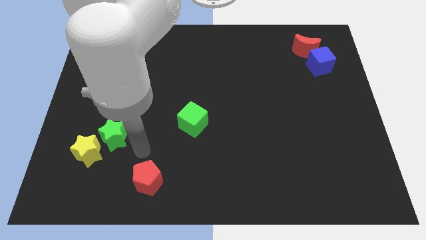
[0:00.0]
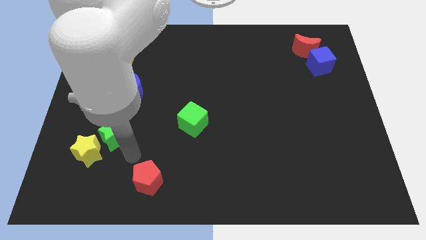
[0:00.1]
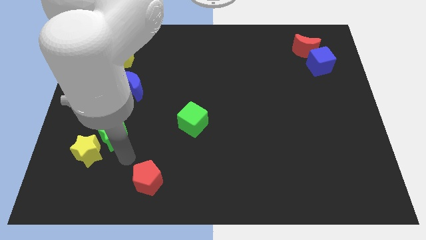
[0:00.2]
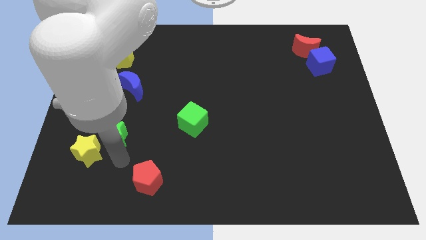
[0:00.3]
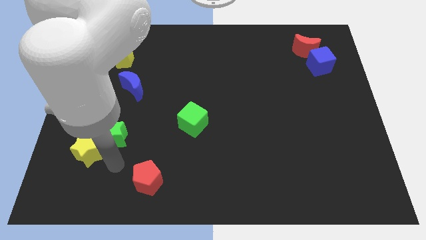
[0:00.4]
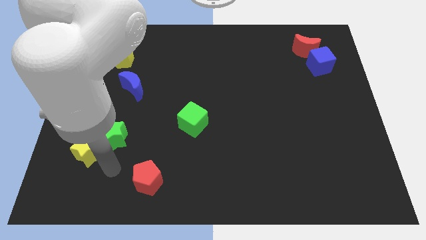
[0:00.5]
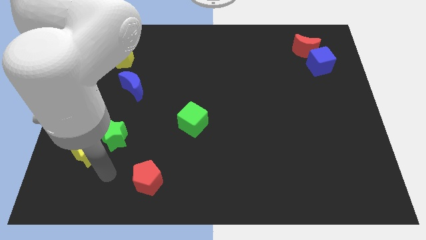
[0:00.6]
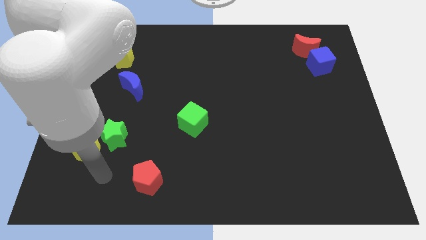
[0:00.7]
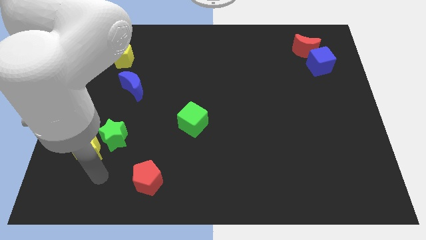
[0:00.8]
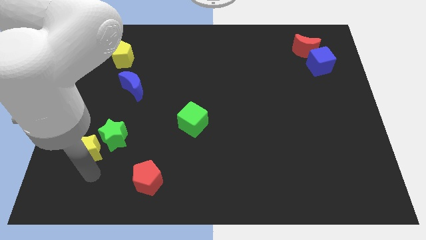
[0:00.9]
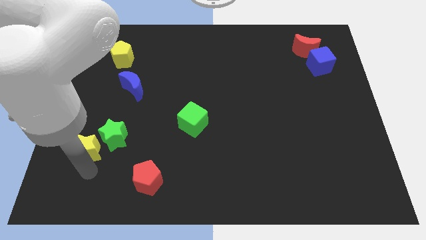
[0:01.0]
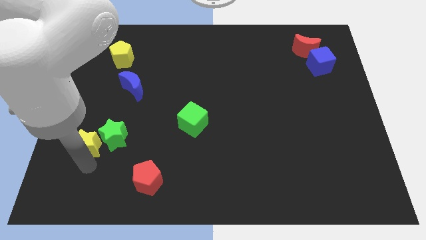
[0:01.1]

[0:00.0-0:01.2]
touch the bottom of yellow star

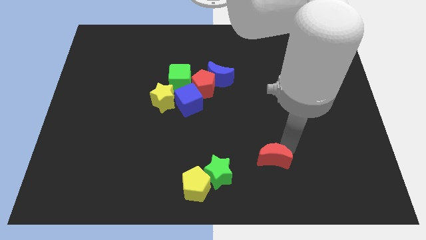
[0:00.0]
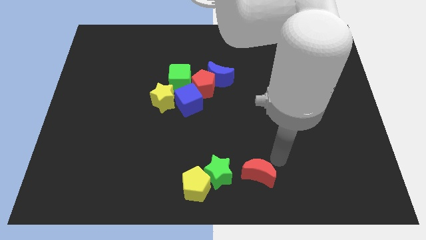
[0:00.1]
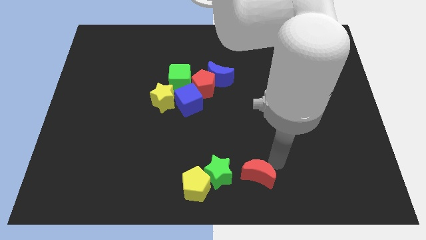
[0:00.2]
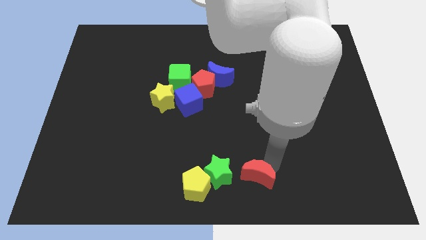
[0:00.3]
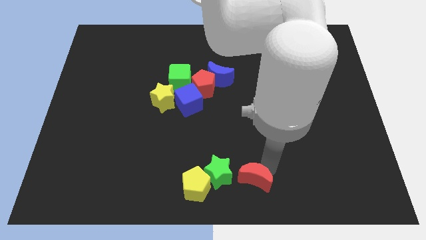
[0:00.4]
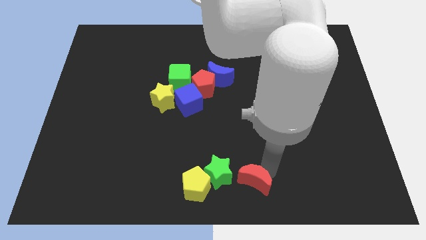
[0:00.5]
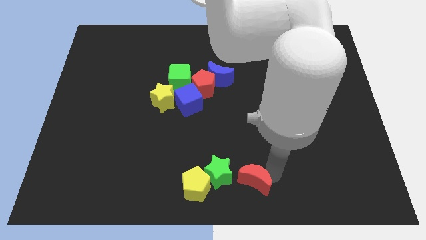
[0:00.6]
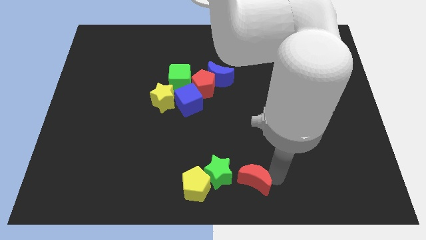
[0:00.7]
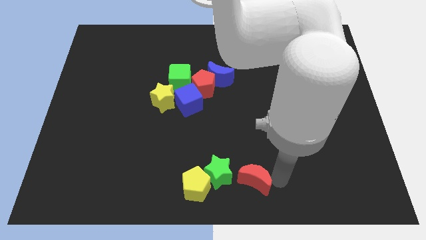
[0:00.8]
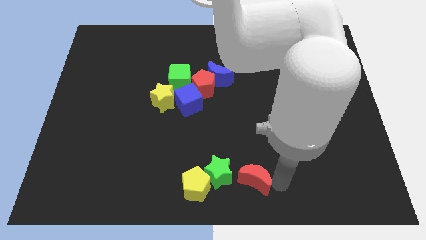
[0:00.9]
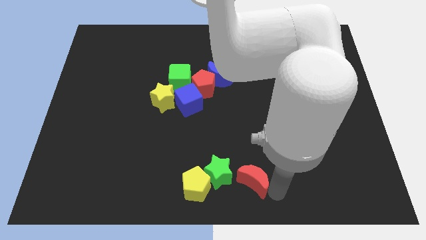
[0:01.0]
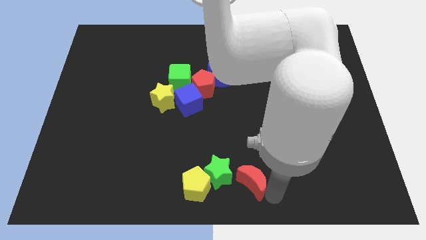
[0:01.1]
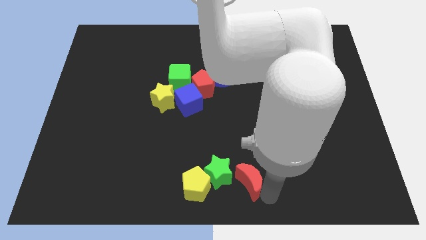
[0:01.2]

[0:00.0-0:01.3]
place the red crescent at the right side of the green star

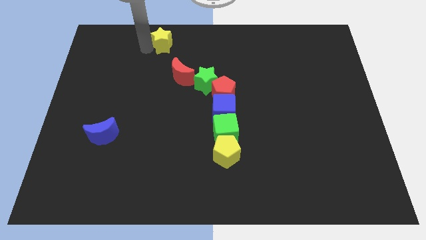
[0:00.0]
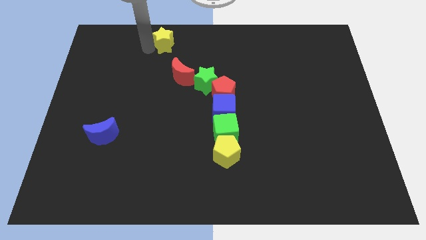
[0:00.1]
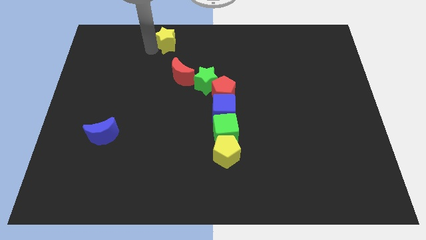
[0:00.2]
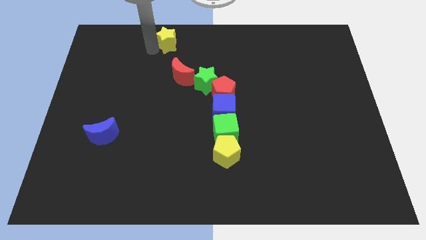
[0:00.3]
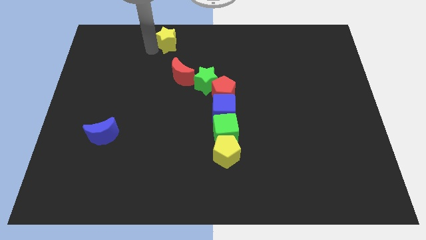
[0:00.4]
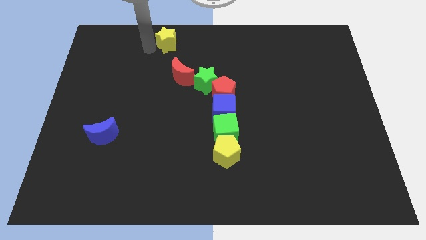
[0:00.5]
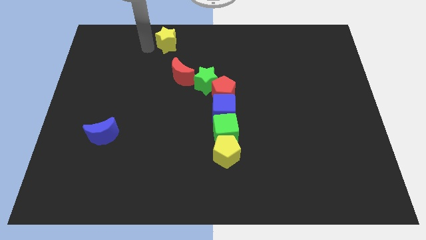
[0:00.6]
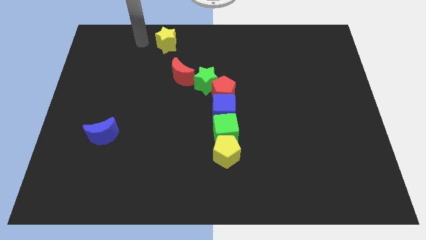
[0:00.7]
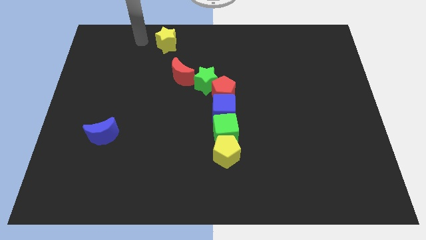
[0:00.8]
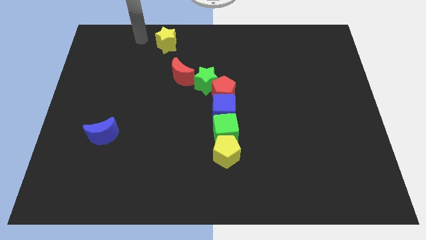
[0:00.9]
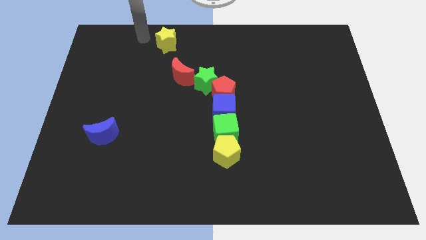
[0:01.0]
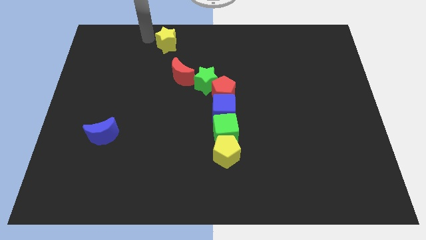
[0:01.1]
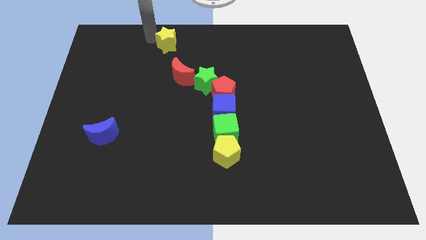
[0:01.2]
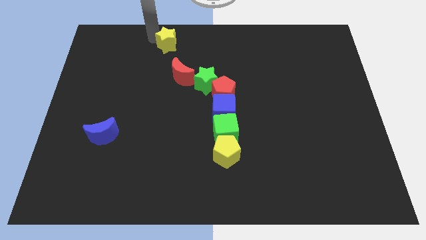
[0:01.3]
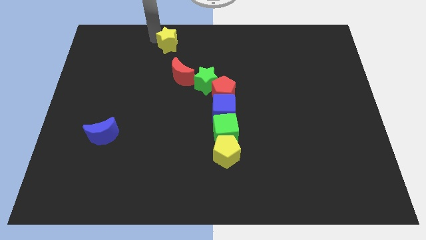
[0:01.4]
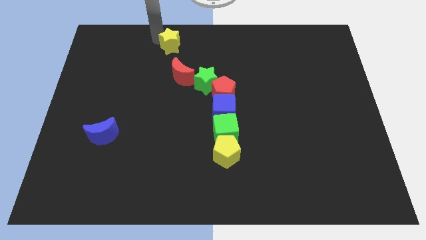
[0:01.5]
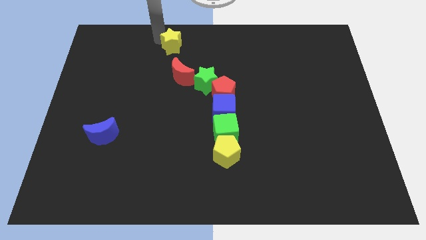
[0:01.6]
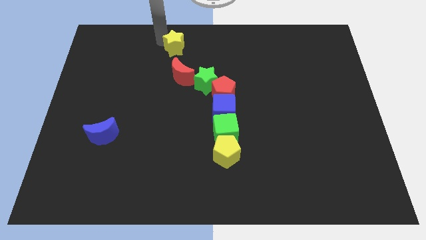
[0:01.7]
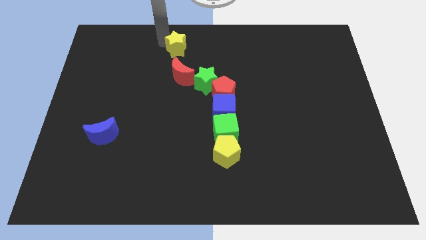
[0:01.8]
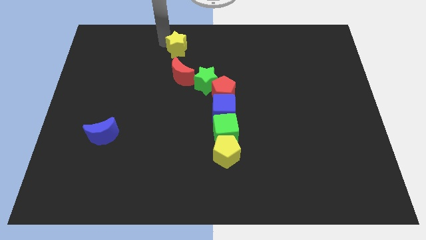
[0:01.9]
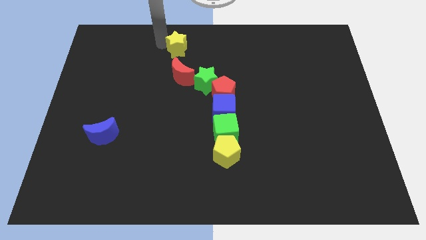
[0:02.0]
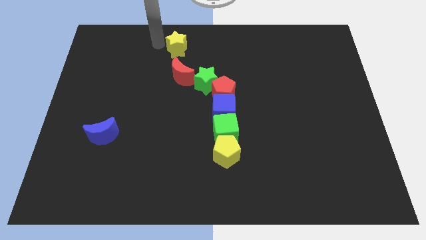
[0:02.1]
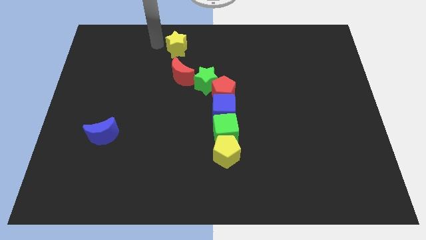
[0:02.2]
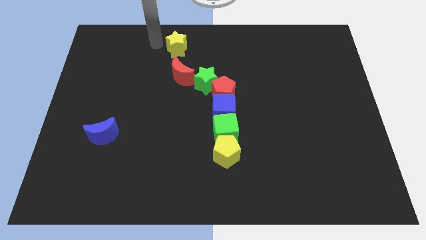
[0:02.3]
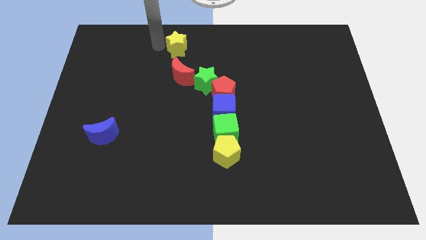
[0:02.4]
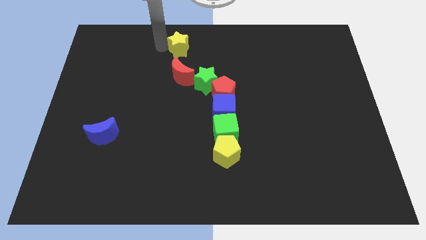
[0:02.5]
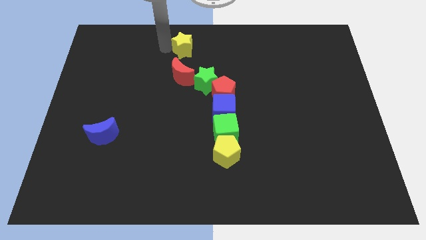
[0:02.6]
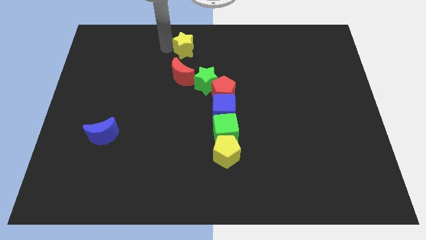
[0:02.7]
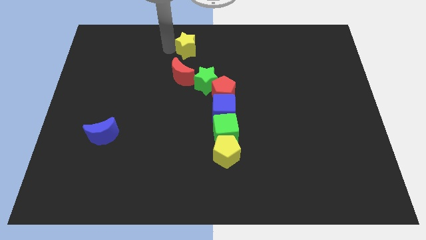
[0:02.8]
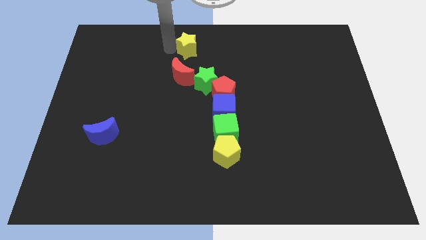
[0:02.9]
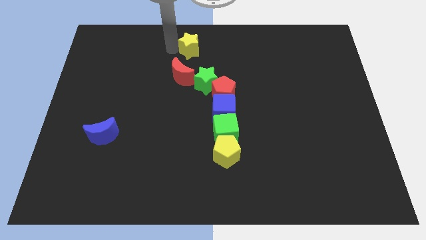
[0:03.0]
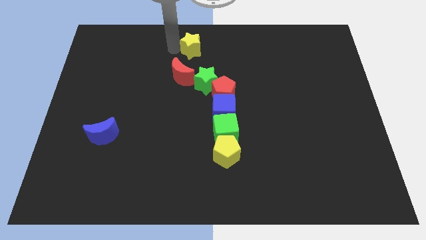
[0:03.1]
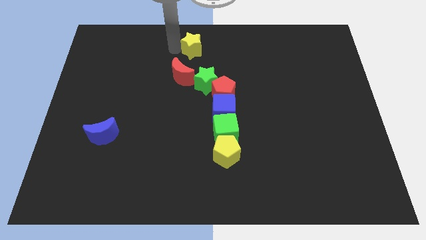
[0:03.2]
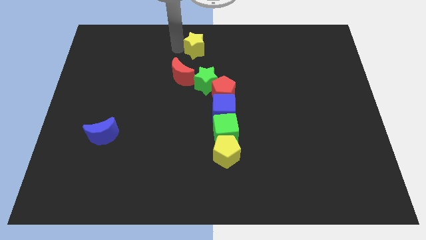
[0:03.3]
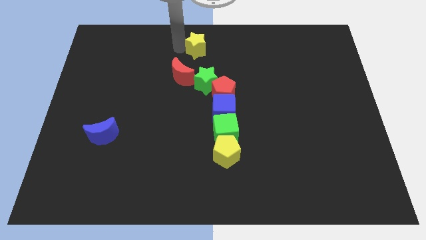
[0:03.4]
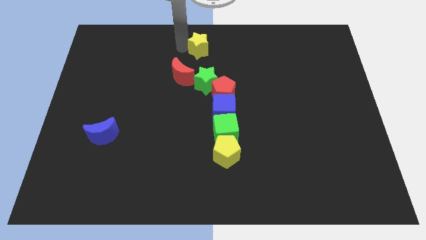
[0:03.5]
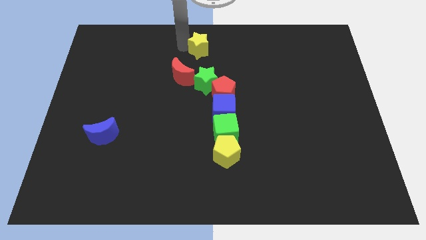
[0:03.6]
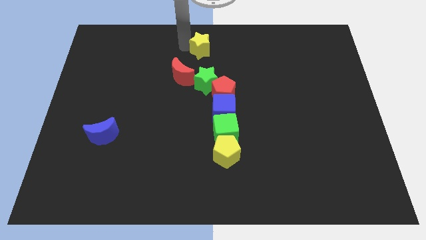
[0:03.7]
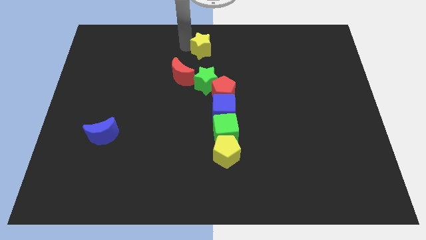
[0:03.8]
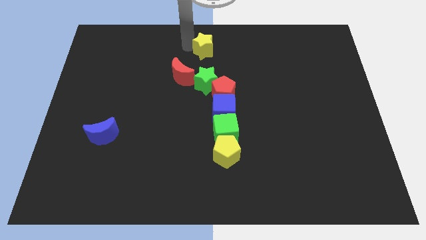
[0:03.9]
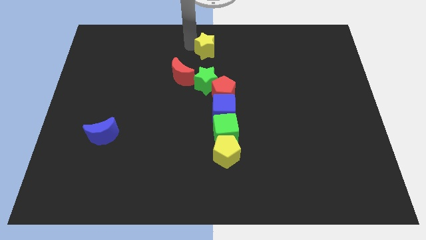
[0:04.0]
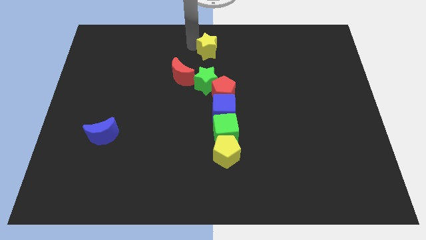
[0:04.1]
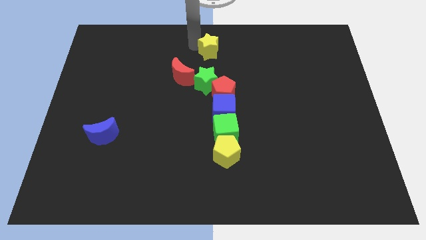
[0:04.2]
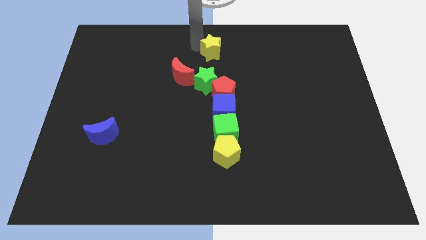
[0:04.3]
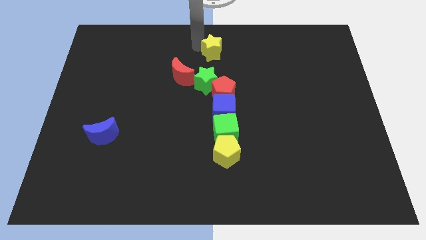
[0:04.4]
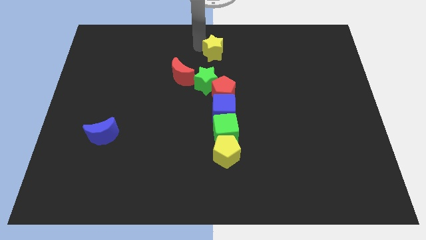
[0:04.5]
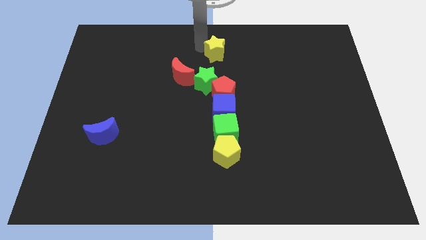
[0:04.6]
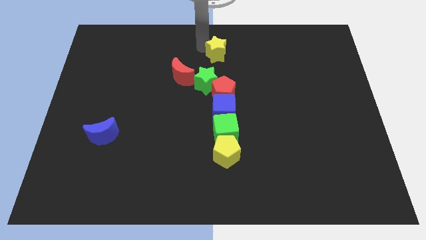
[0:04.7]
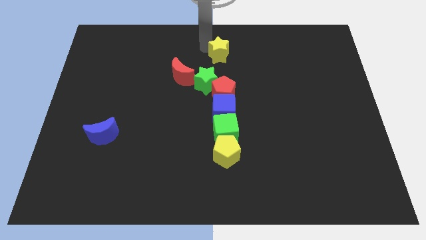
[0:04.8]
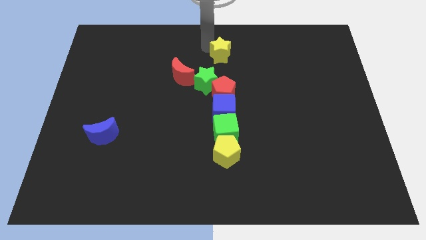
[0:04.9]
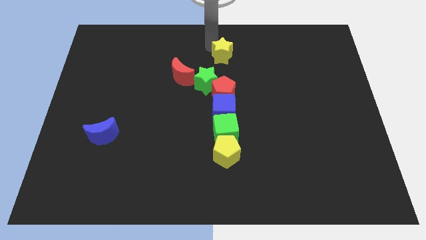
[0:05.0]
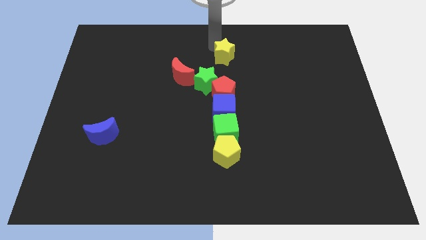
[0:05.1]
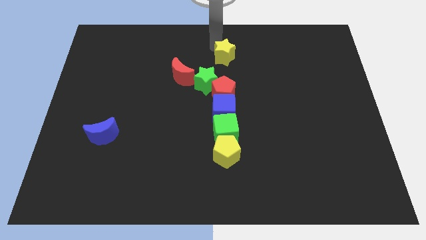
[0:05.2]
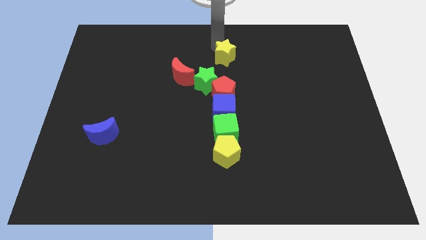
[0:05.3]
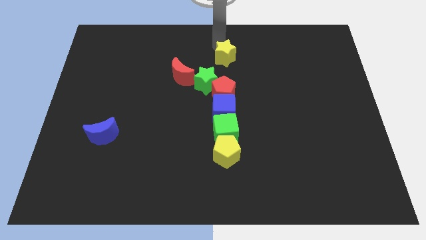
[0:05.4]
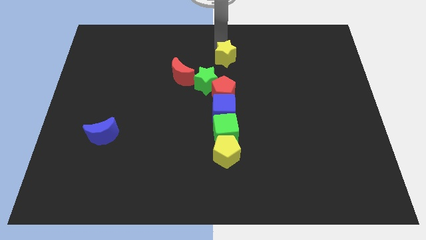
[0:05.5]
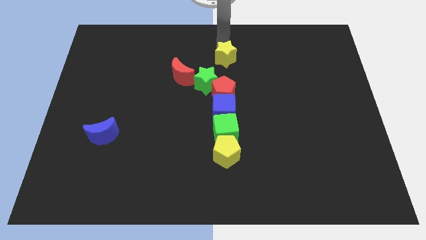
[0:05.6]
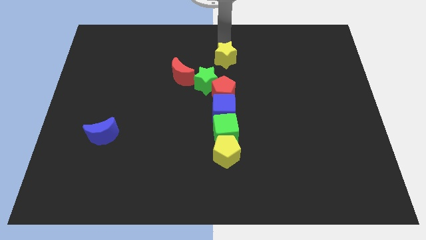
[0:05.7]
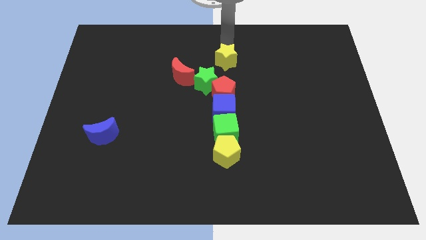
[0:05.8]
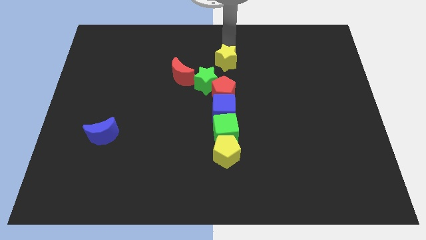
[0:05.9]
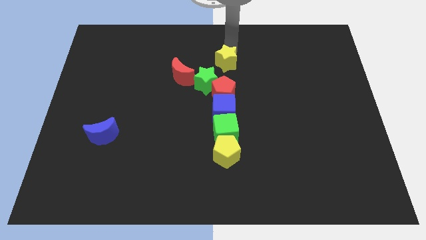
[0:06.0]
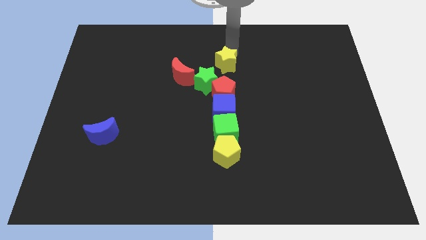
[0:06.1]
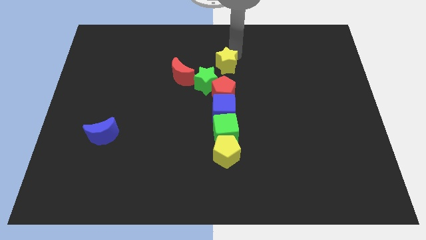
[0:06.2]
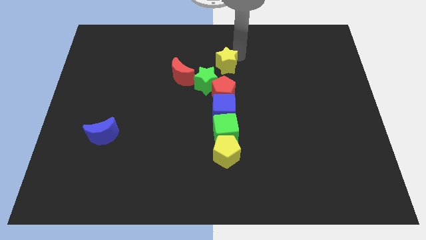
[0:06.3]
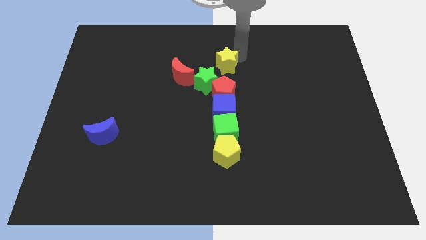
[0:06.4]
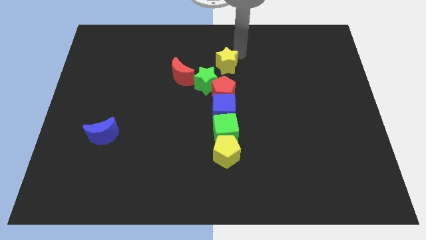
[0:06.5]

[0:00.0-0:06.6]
place the yellow star vertically above the red pentagon
